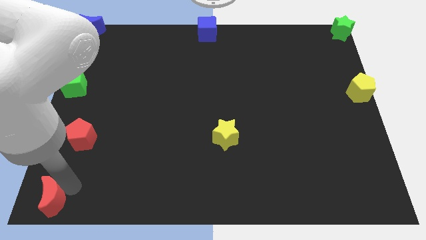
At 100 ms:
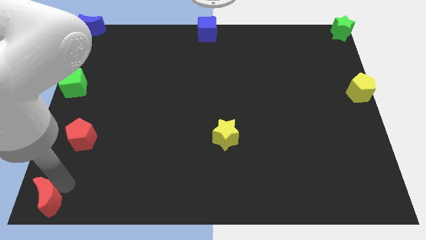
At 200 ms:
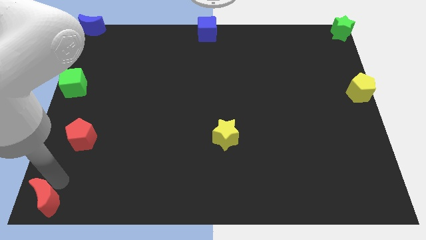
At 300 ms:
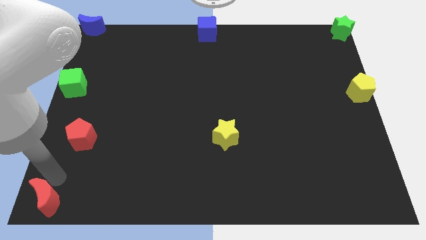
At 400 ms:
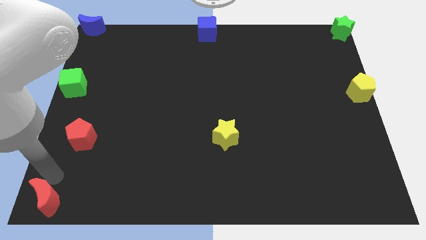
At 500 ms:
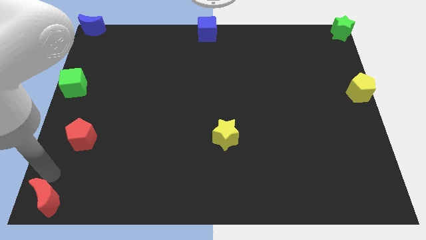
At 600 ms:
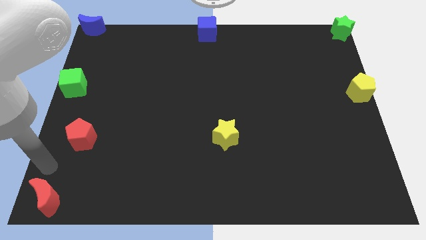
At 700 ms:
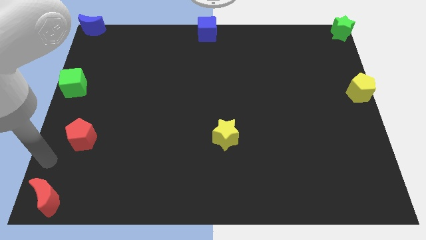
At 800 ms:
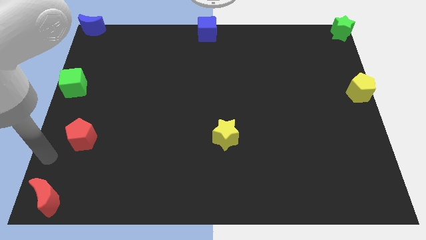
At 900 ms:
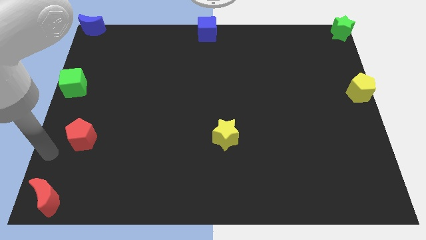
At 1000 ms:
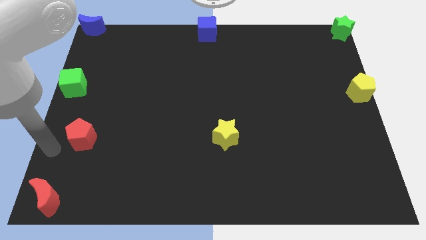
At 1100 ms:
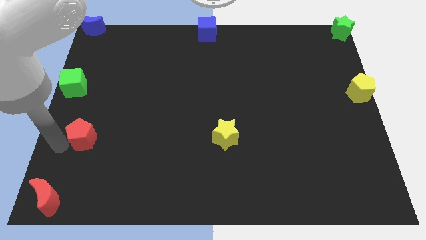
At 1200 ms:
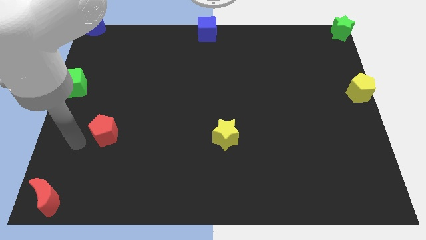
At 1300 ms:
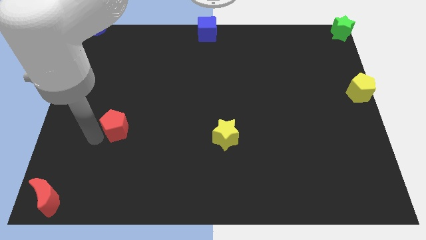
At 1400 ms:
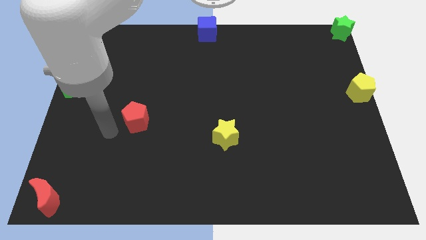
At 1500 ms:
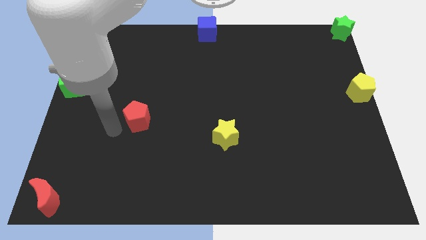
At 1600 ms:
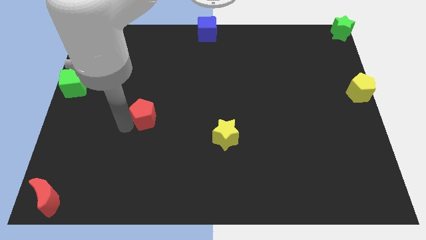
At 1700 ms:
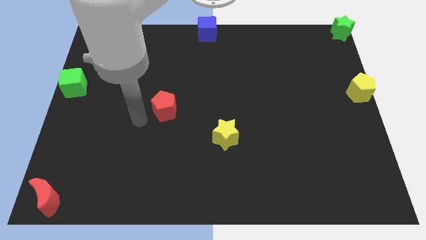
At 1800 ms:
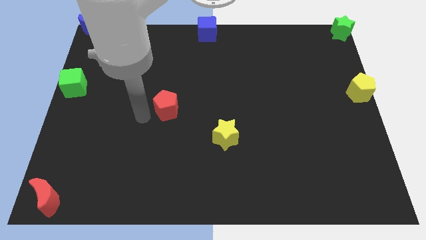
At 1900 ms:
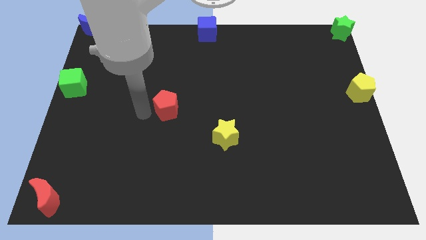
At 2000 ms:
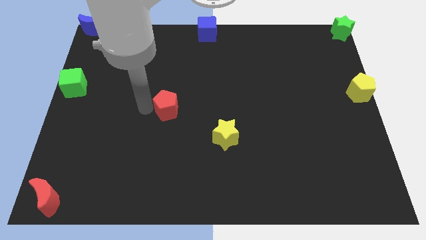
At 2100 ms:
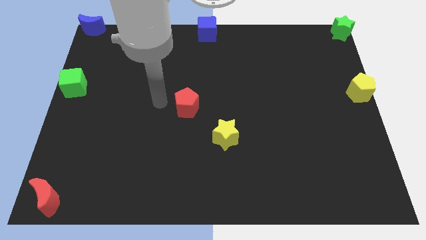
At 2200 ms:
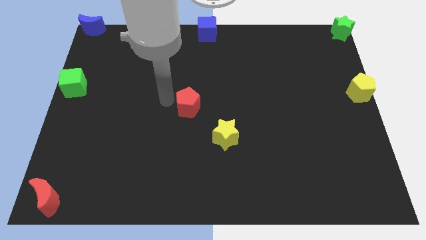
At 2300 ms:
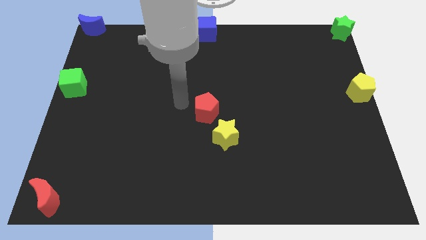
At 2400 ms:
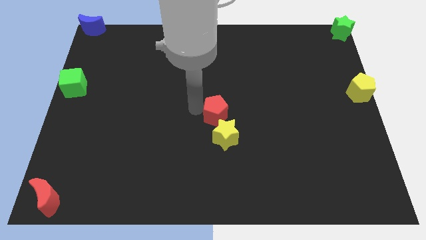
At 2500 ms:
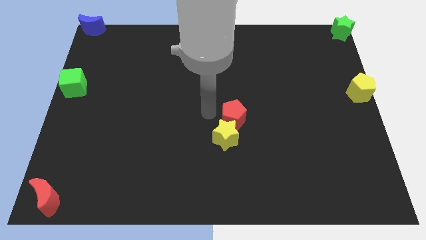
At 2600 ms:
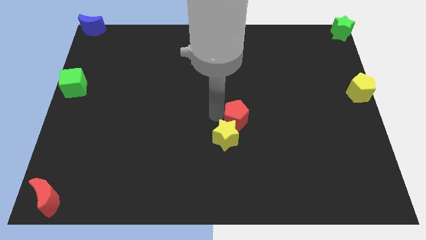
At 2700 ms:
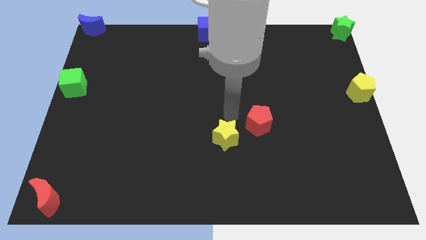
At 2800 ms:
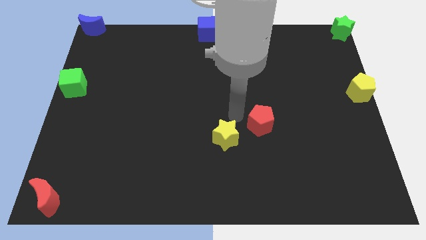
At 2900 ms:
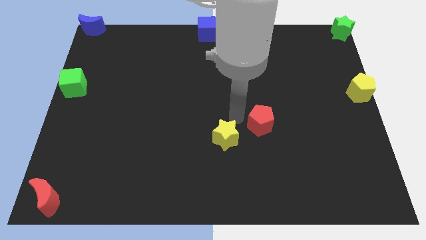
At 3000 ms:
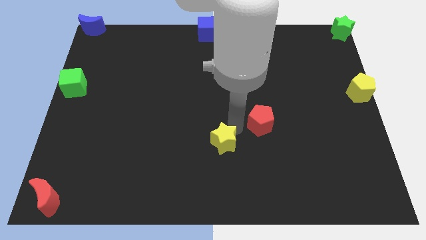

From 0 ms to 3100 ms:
push the red pentagon to the right of the yellow star

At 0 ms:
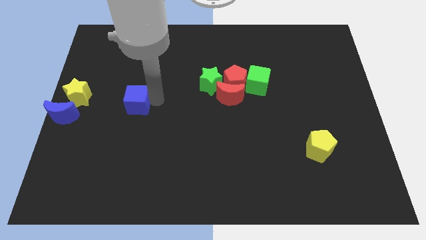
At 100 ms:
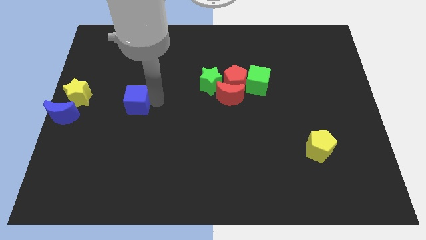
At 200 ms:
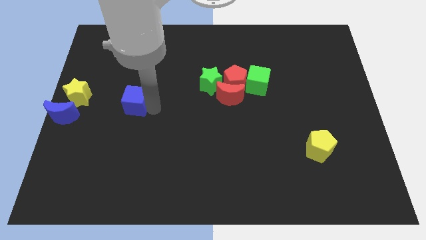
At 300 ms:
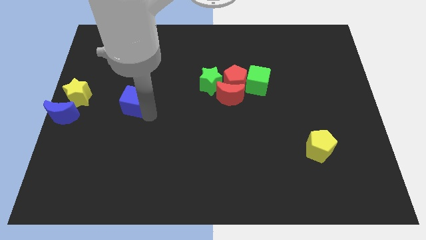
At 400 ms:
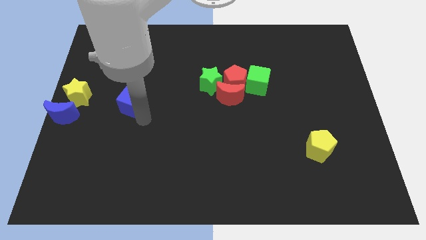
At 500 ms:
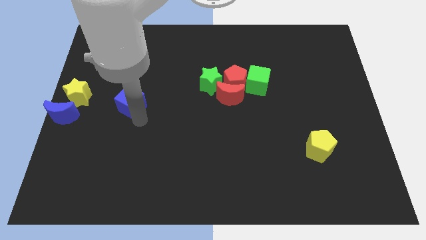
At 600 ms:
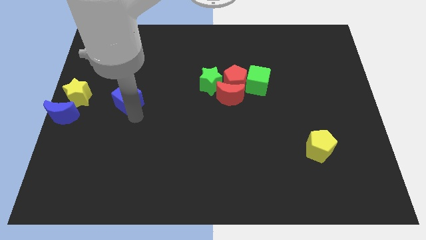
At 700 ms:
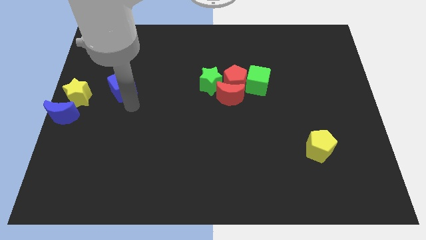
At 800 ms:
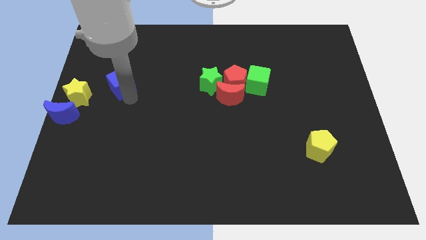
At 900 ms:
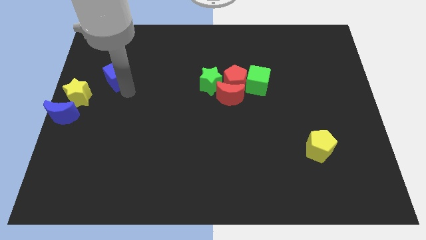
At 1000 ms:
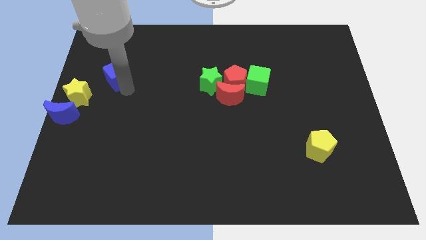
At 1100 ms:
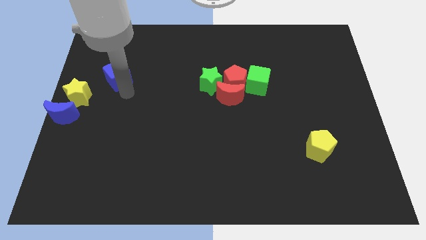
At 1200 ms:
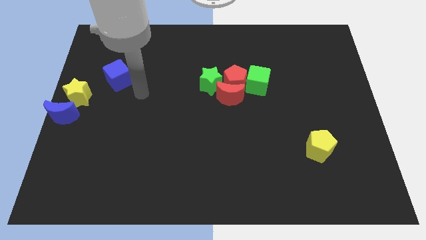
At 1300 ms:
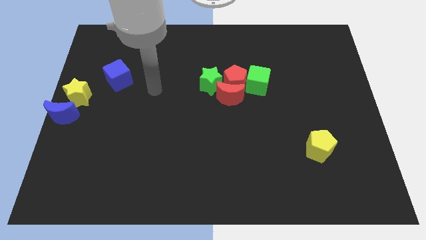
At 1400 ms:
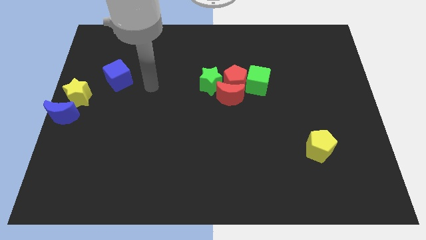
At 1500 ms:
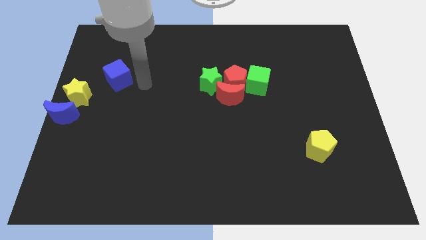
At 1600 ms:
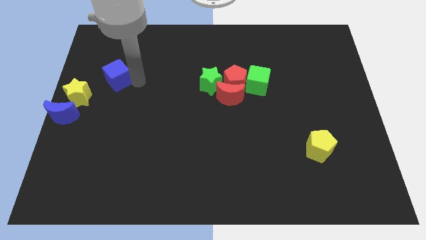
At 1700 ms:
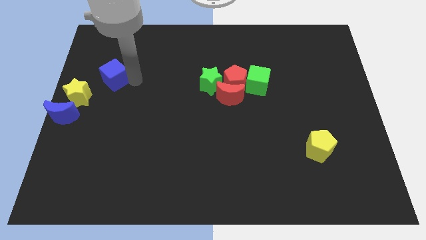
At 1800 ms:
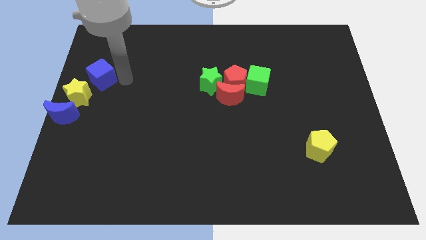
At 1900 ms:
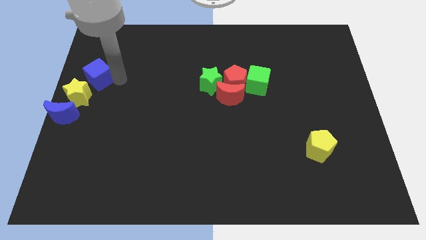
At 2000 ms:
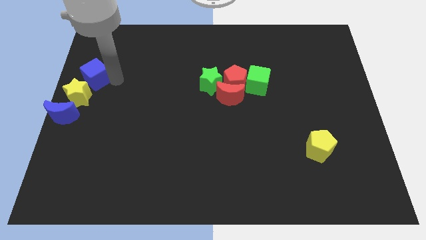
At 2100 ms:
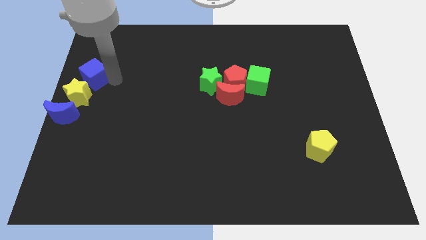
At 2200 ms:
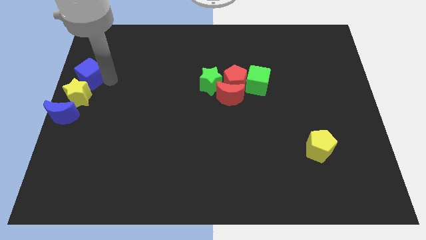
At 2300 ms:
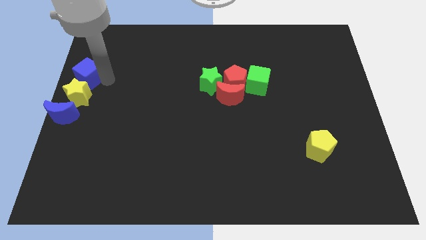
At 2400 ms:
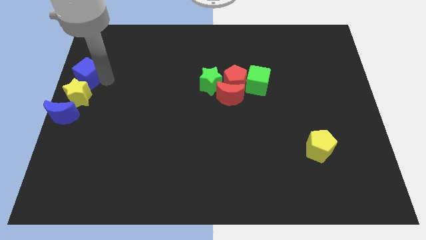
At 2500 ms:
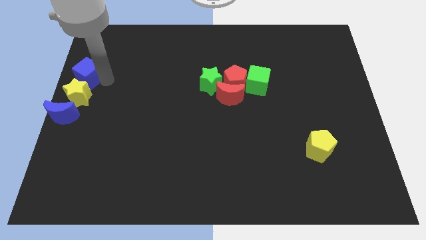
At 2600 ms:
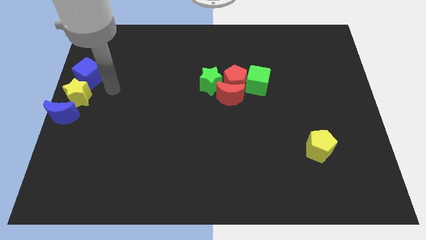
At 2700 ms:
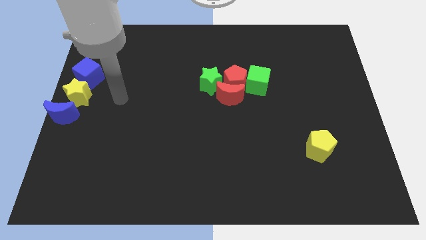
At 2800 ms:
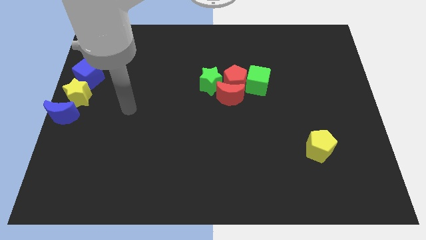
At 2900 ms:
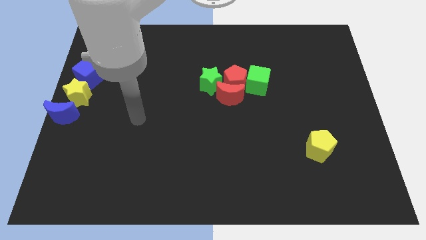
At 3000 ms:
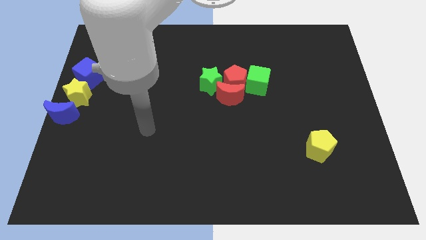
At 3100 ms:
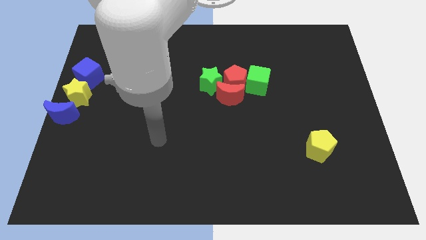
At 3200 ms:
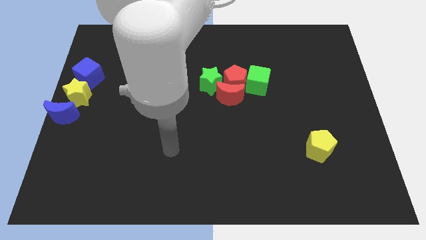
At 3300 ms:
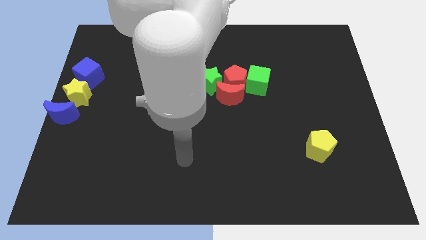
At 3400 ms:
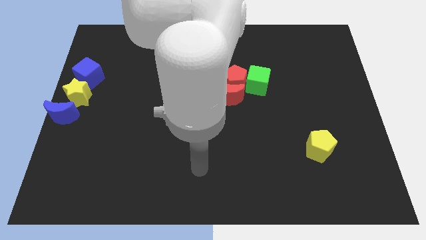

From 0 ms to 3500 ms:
place the blue cube diagonally top right to the yellow star

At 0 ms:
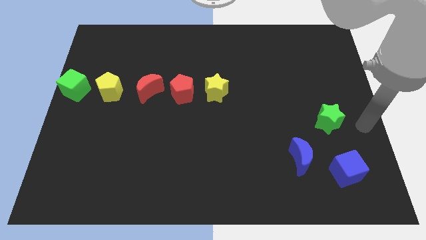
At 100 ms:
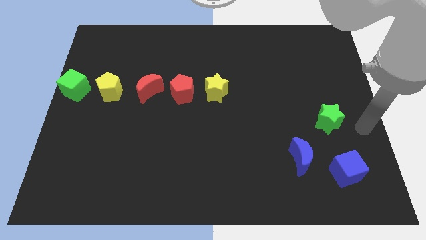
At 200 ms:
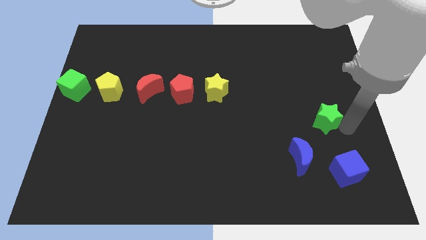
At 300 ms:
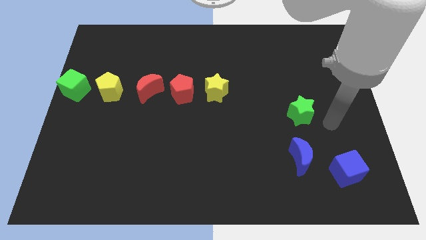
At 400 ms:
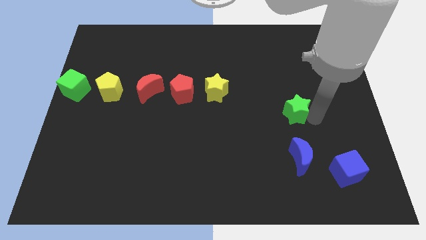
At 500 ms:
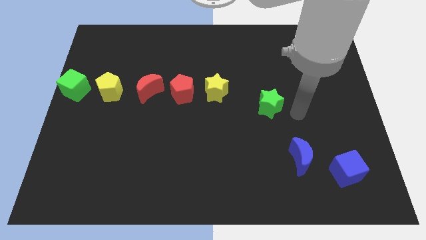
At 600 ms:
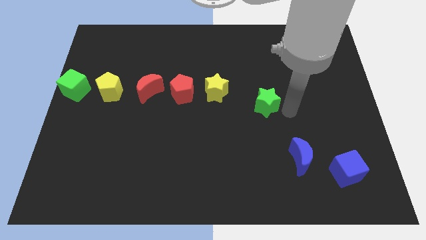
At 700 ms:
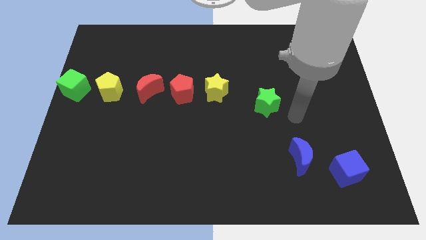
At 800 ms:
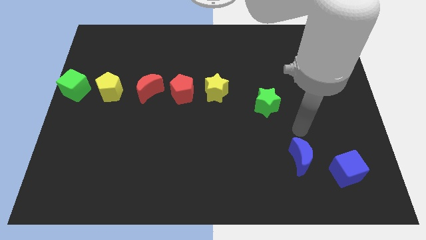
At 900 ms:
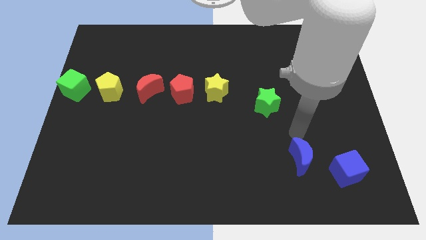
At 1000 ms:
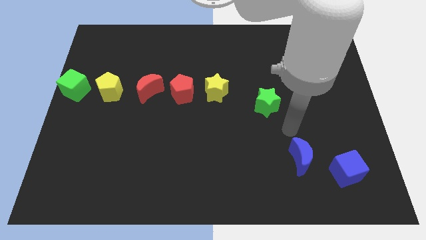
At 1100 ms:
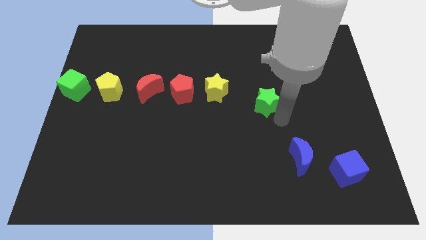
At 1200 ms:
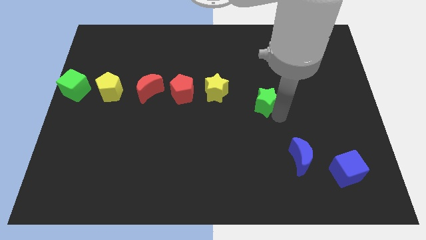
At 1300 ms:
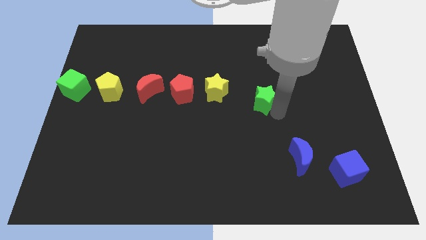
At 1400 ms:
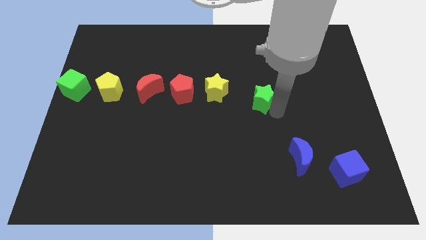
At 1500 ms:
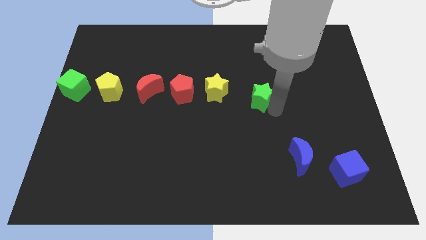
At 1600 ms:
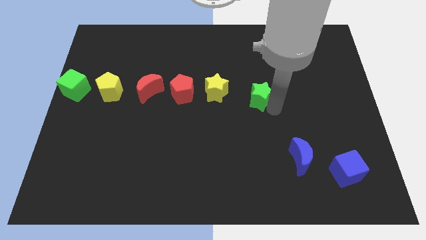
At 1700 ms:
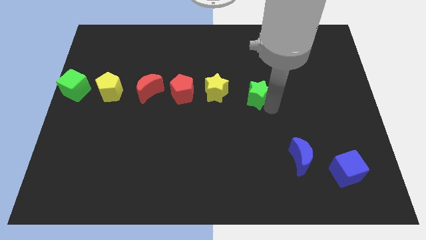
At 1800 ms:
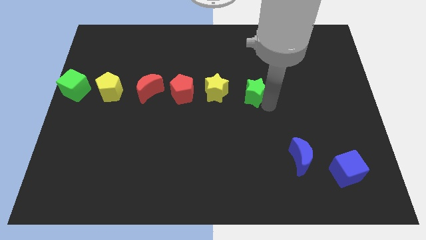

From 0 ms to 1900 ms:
push the green star towards the yellow star

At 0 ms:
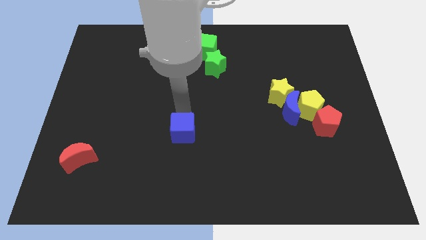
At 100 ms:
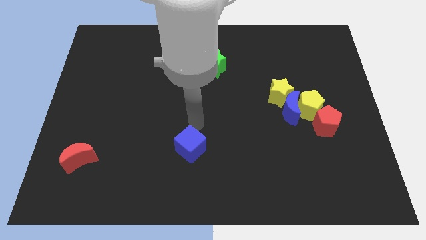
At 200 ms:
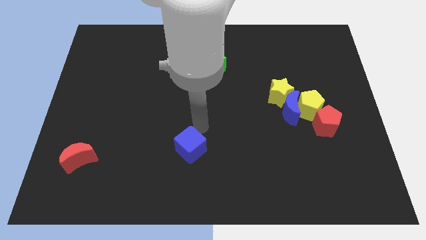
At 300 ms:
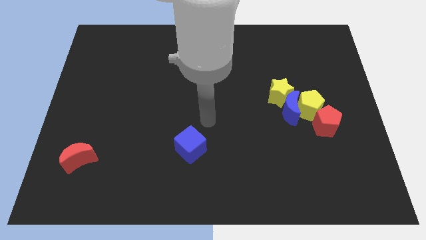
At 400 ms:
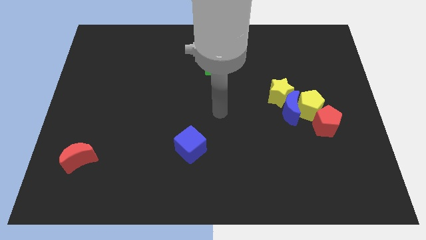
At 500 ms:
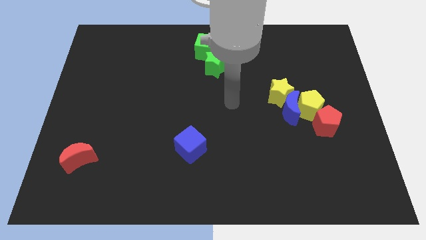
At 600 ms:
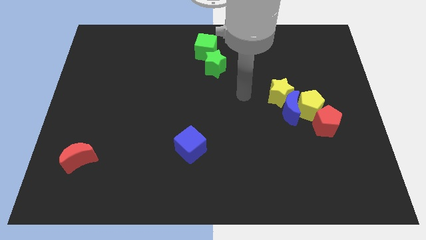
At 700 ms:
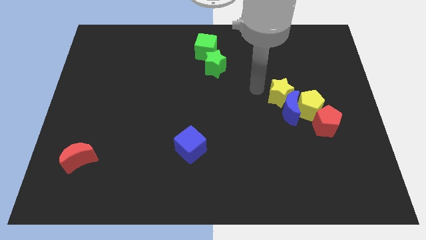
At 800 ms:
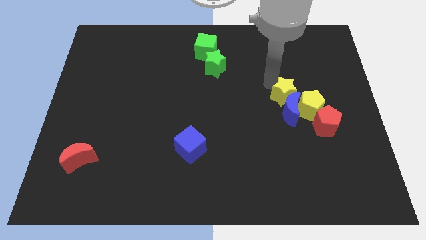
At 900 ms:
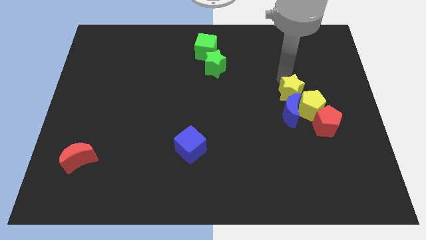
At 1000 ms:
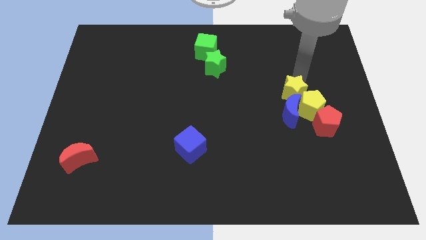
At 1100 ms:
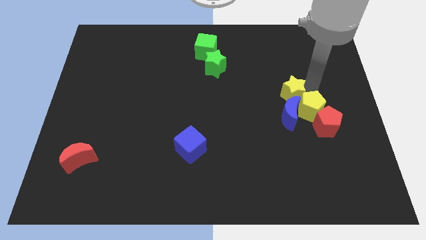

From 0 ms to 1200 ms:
point your hand to the right of the yellow star
